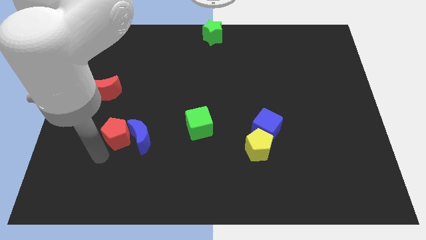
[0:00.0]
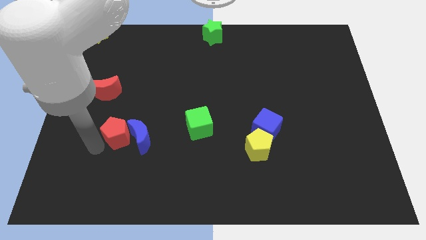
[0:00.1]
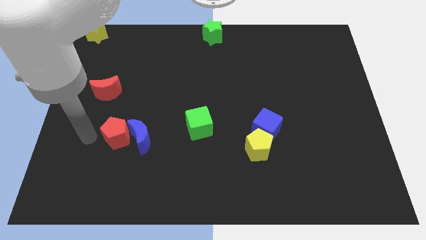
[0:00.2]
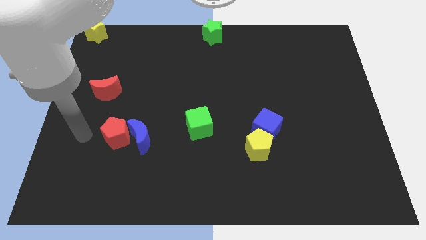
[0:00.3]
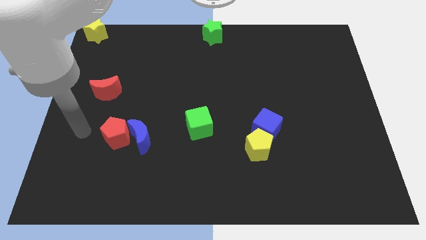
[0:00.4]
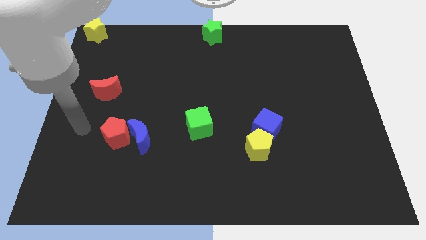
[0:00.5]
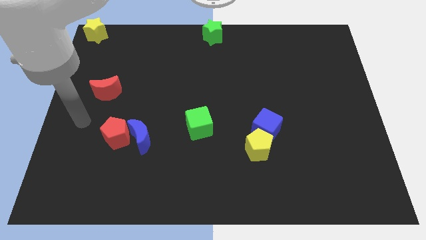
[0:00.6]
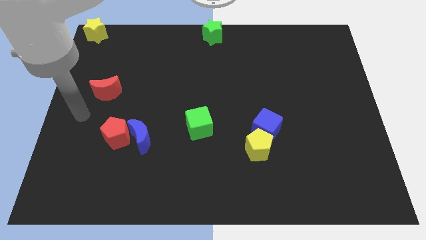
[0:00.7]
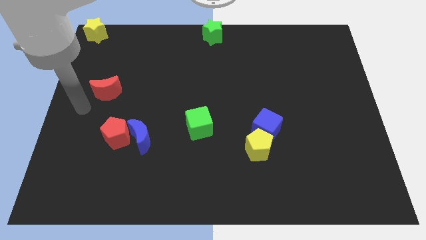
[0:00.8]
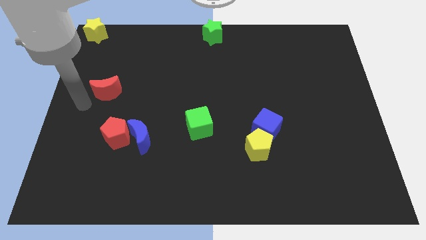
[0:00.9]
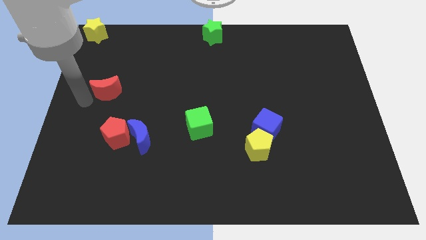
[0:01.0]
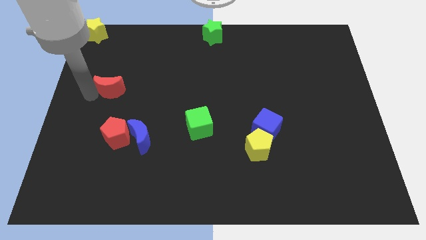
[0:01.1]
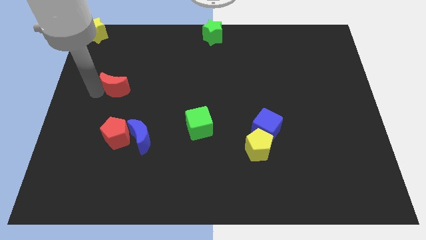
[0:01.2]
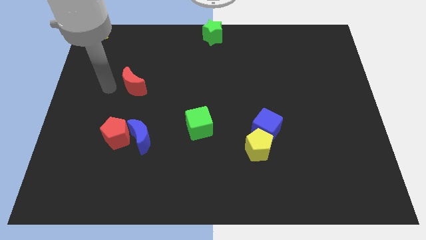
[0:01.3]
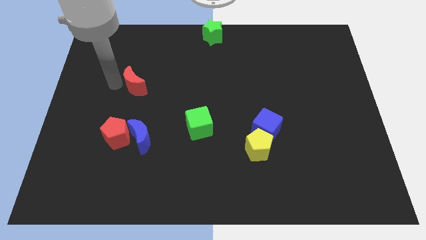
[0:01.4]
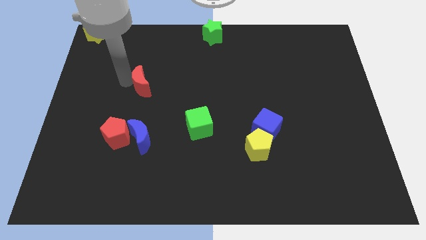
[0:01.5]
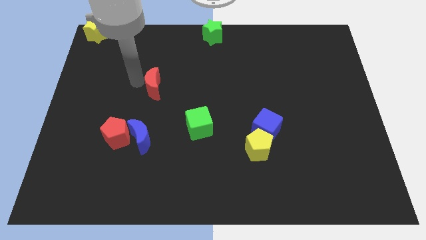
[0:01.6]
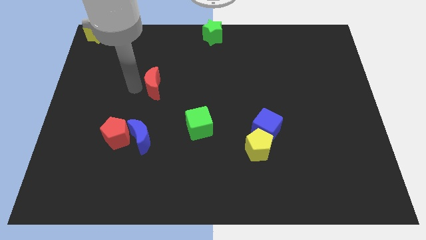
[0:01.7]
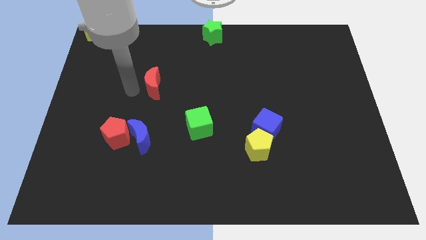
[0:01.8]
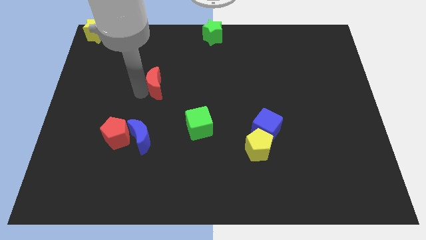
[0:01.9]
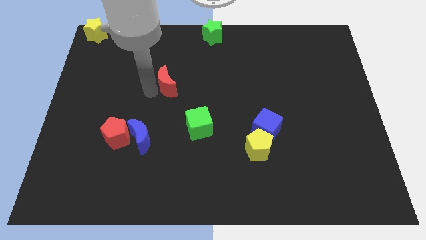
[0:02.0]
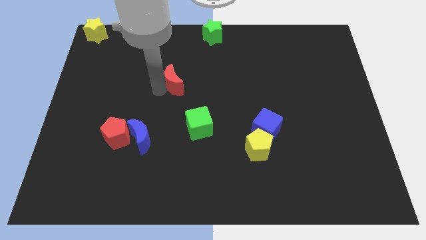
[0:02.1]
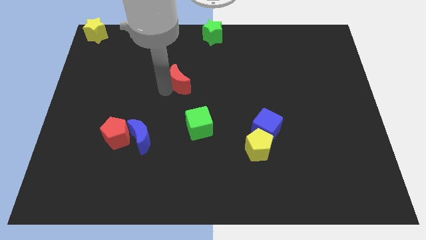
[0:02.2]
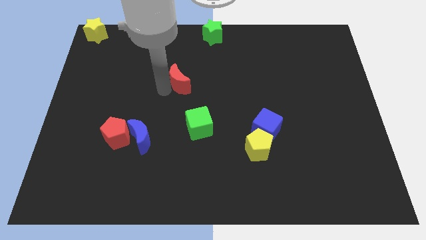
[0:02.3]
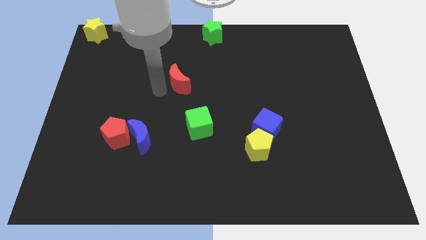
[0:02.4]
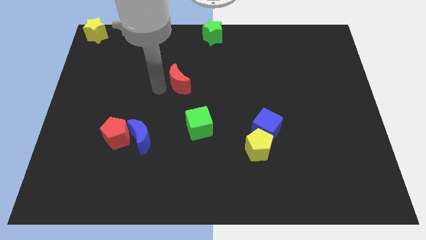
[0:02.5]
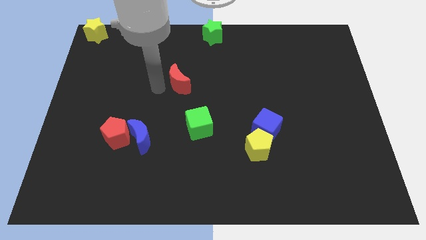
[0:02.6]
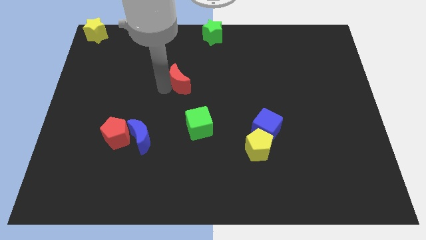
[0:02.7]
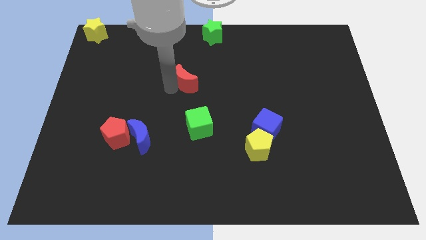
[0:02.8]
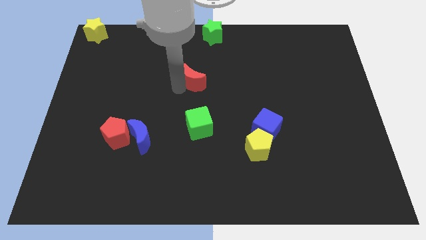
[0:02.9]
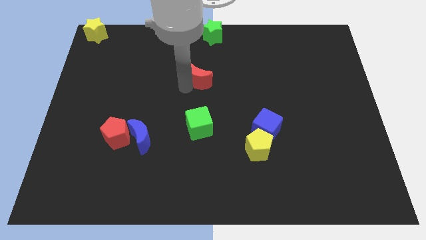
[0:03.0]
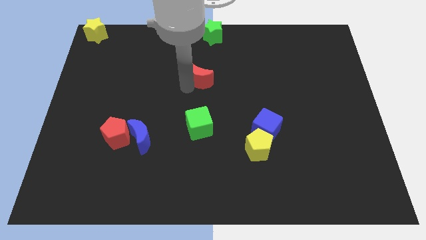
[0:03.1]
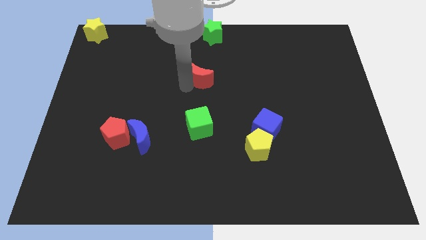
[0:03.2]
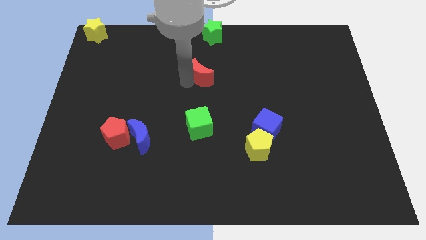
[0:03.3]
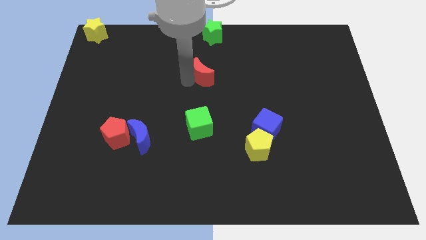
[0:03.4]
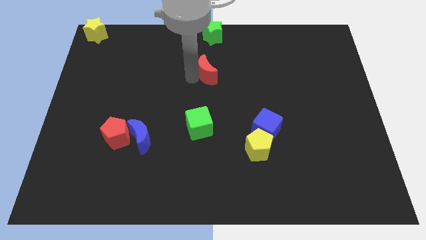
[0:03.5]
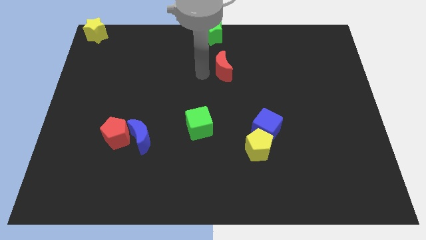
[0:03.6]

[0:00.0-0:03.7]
place the red moon in between the green cube and green star

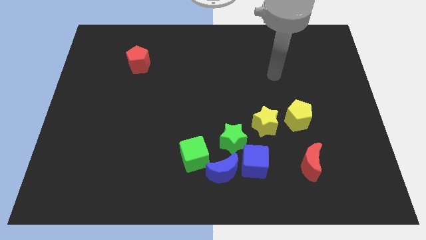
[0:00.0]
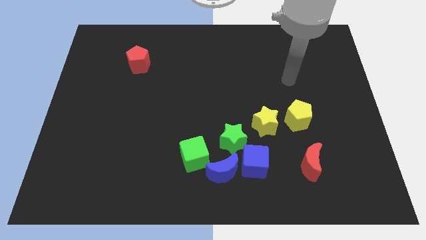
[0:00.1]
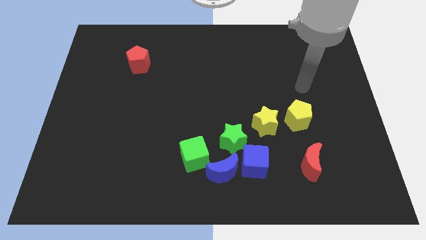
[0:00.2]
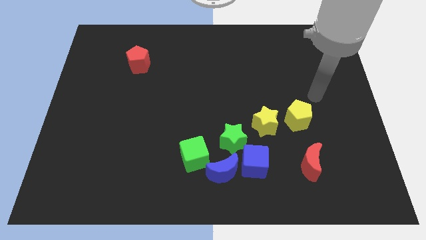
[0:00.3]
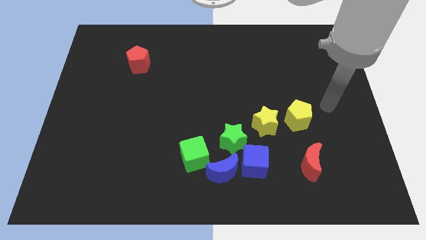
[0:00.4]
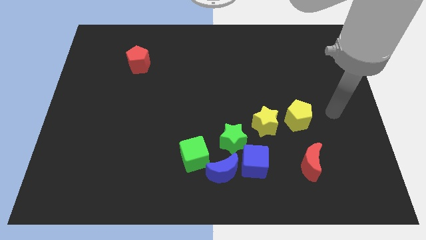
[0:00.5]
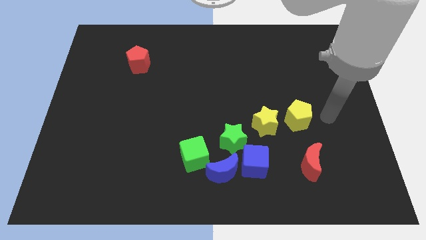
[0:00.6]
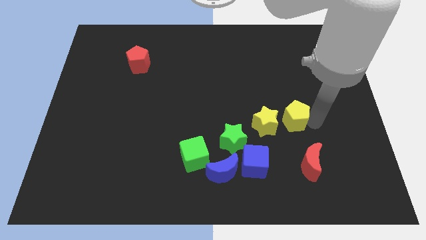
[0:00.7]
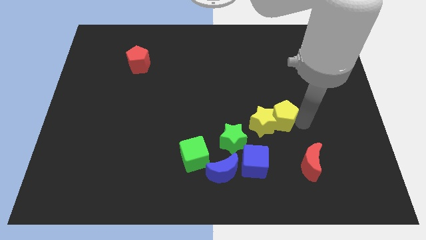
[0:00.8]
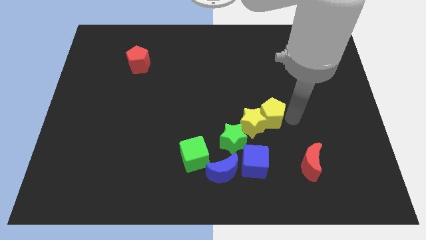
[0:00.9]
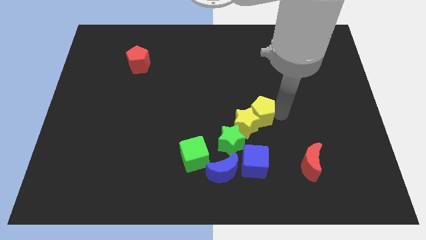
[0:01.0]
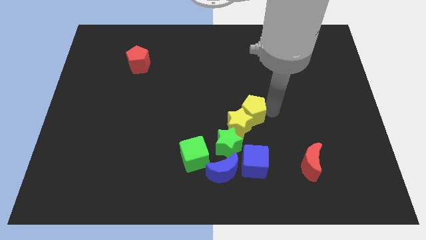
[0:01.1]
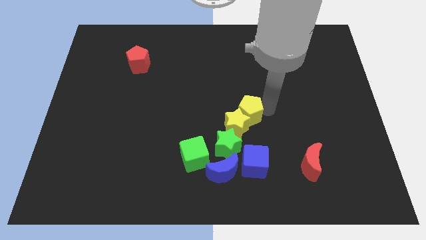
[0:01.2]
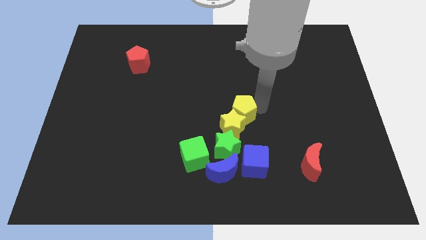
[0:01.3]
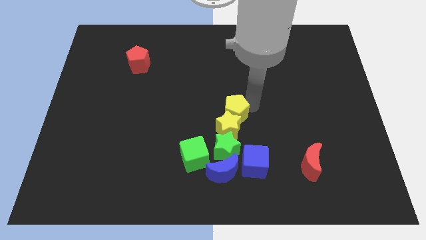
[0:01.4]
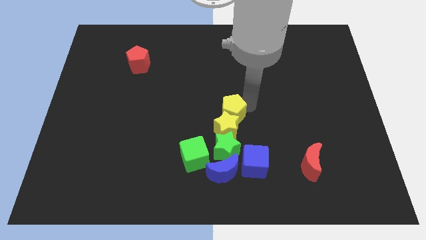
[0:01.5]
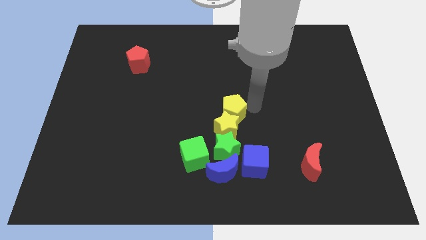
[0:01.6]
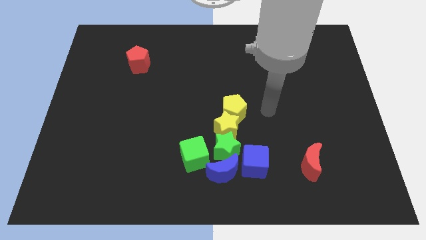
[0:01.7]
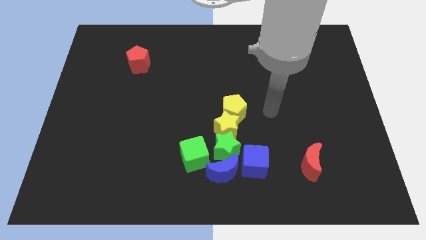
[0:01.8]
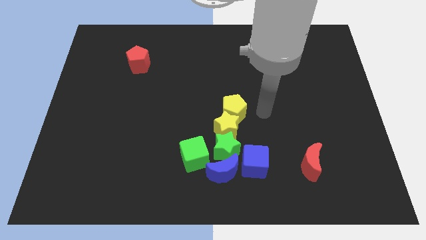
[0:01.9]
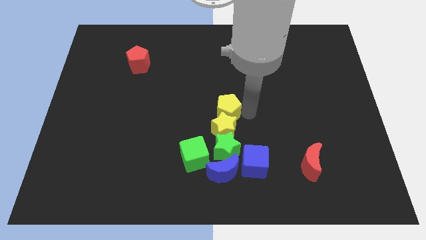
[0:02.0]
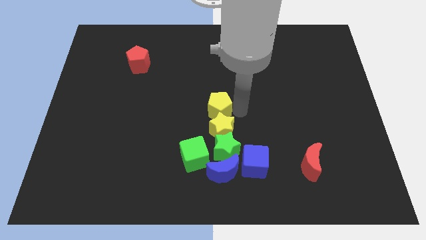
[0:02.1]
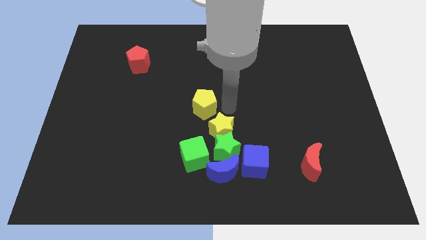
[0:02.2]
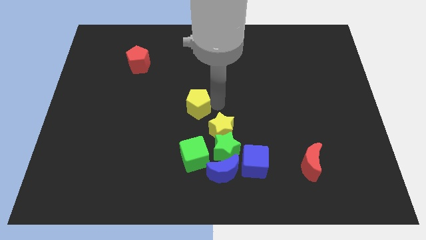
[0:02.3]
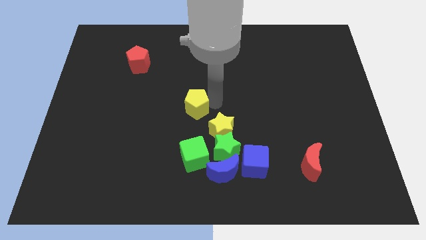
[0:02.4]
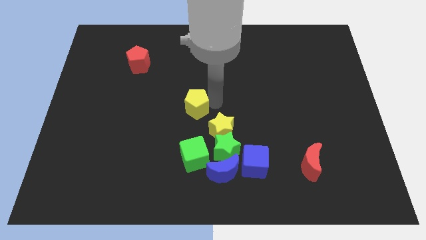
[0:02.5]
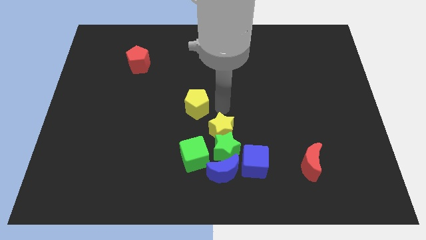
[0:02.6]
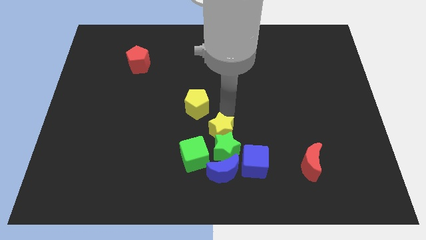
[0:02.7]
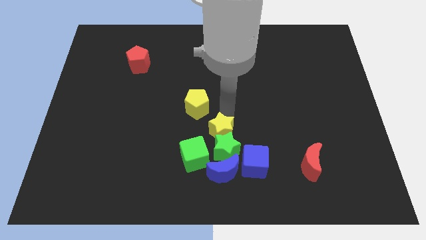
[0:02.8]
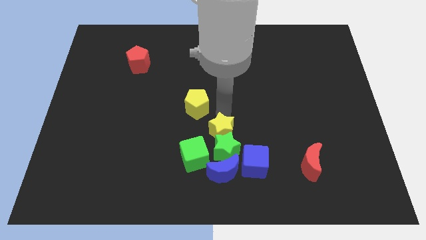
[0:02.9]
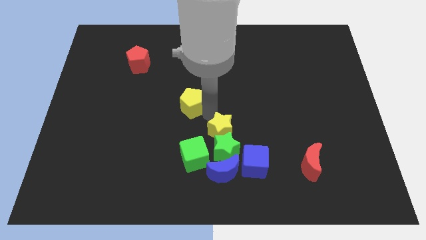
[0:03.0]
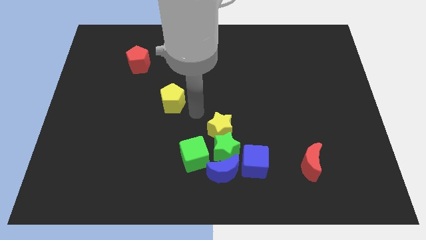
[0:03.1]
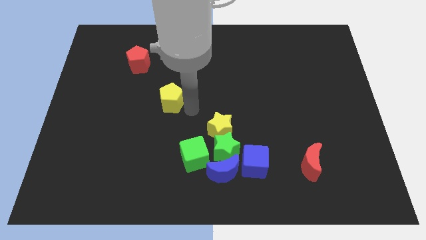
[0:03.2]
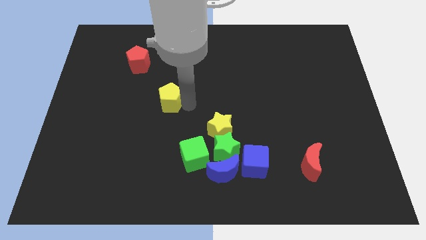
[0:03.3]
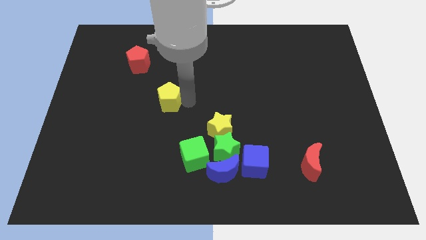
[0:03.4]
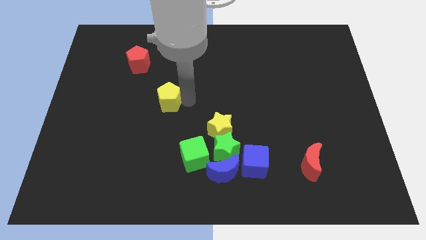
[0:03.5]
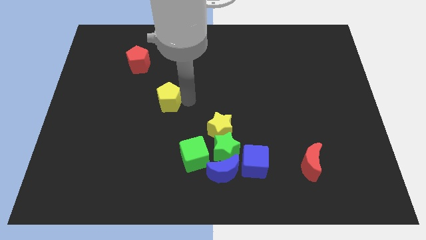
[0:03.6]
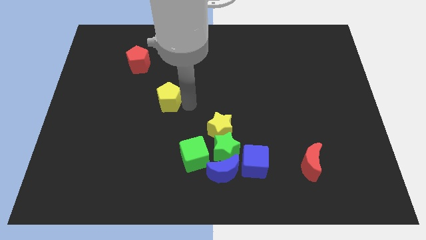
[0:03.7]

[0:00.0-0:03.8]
push the yellow pentagon away from the yellow star

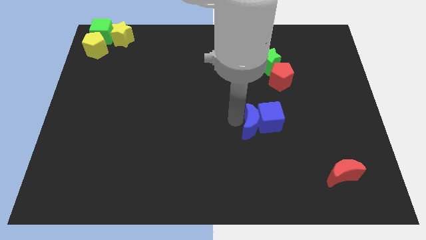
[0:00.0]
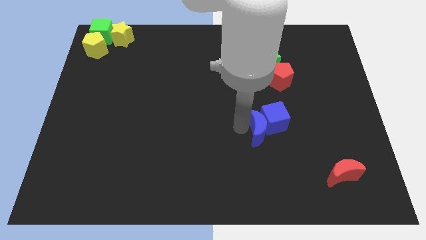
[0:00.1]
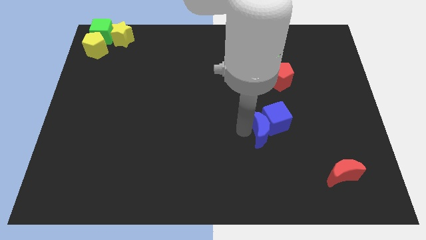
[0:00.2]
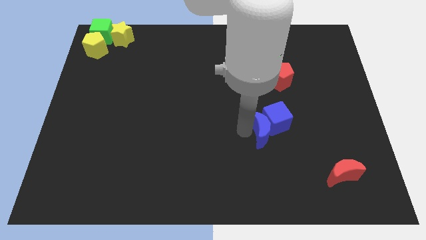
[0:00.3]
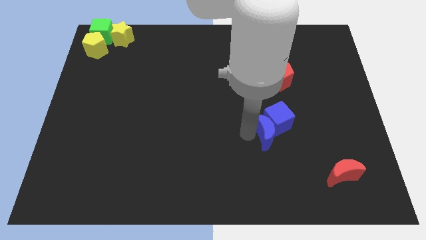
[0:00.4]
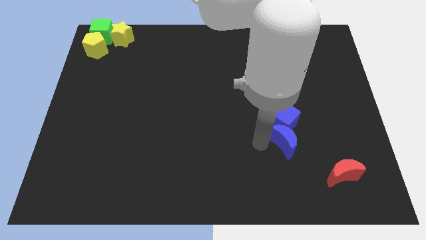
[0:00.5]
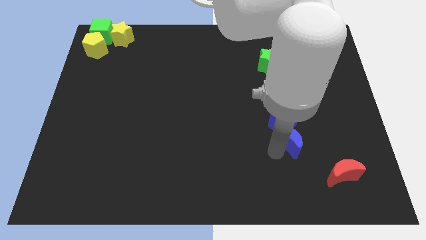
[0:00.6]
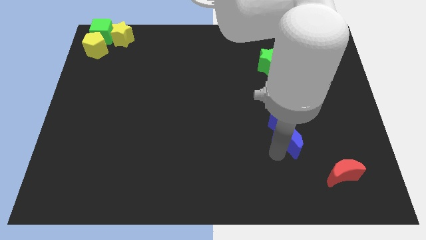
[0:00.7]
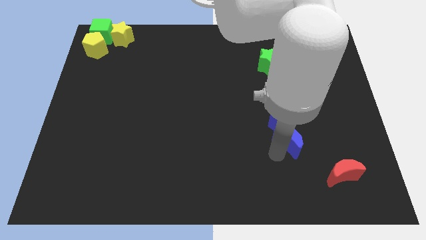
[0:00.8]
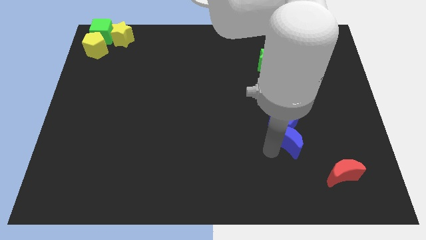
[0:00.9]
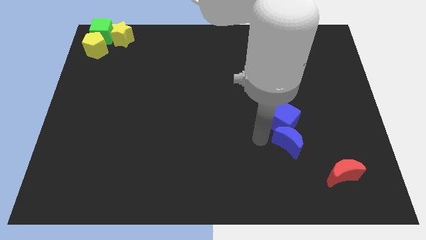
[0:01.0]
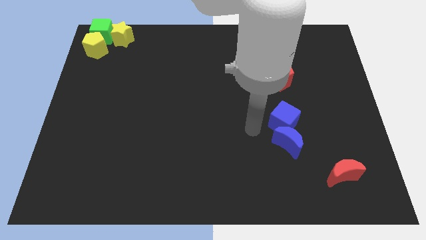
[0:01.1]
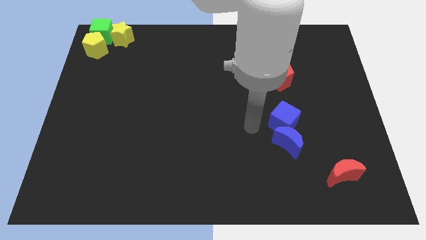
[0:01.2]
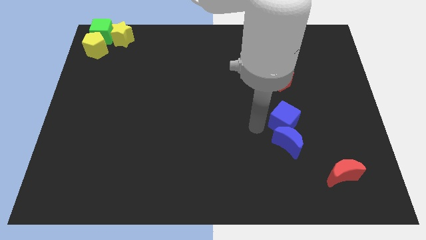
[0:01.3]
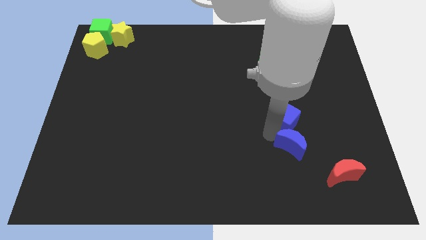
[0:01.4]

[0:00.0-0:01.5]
push the blue moon to the bottom of the blue cube
